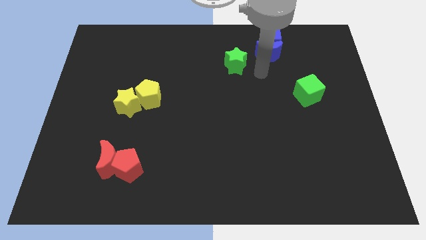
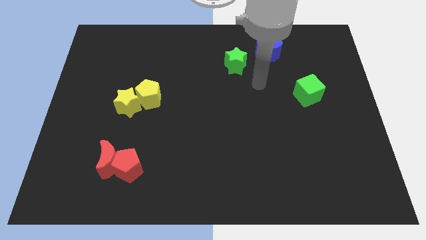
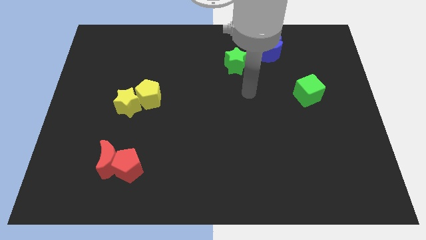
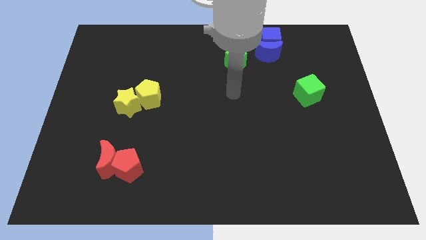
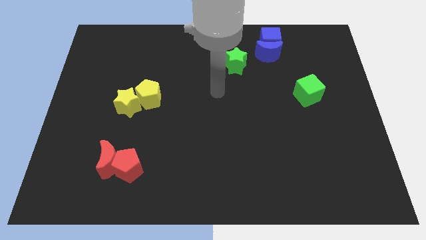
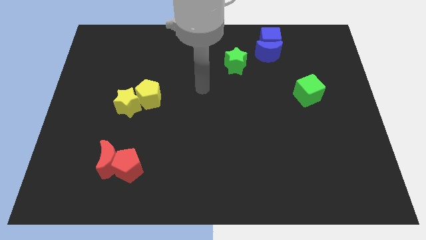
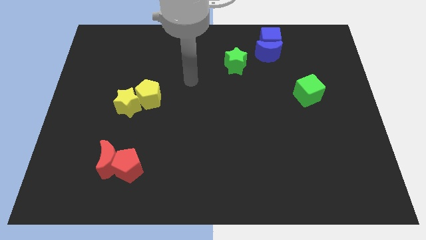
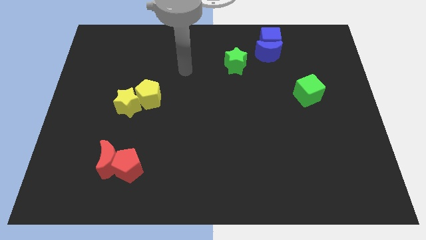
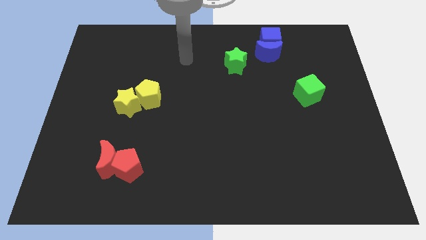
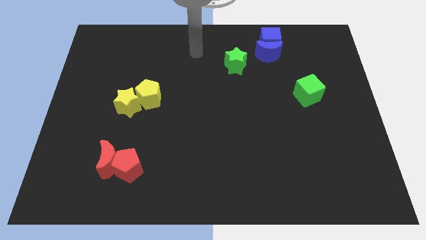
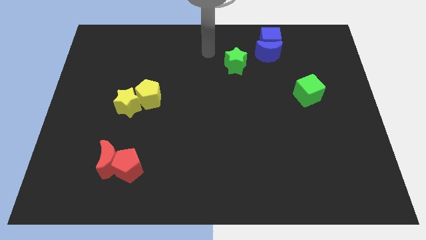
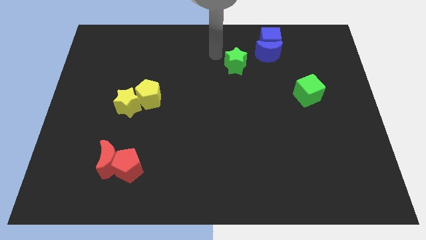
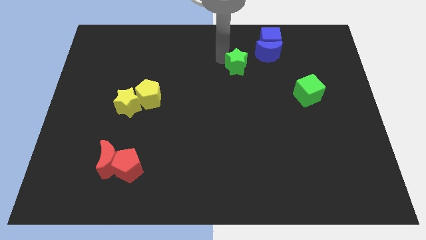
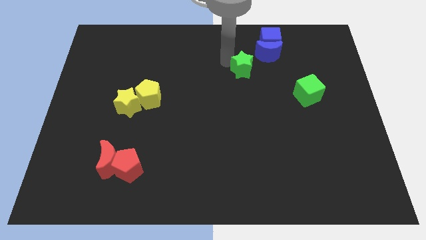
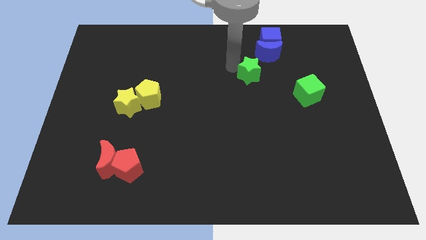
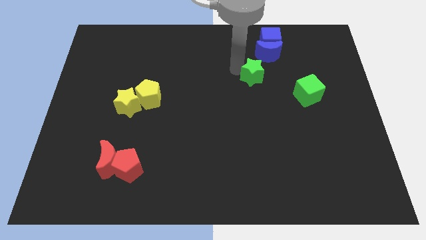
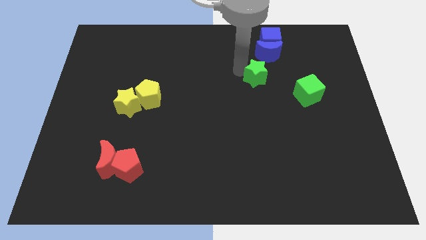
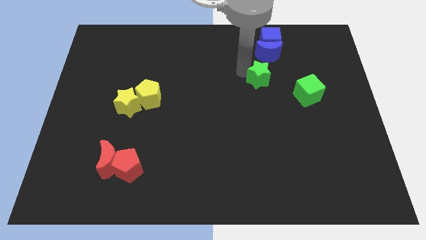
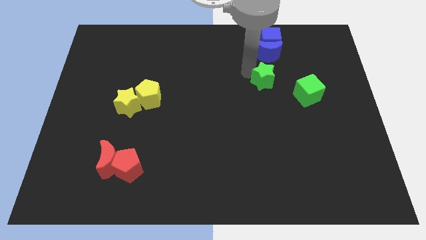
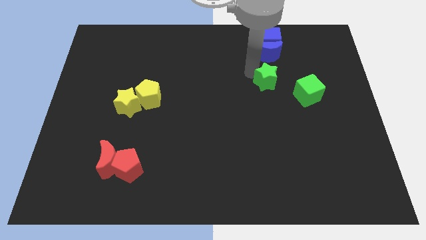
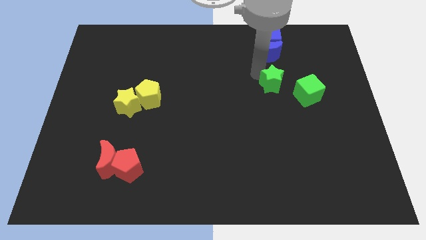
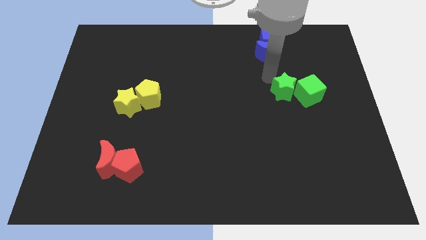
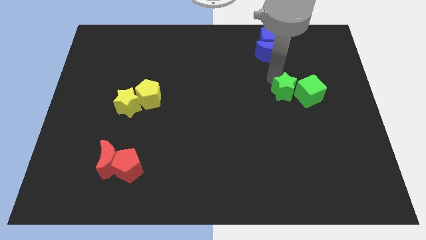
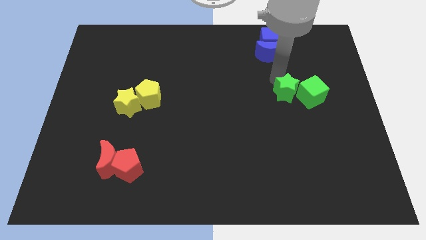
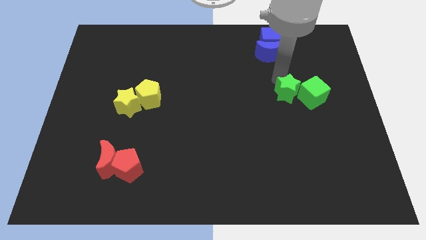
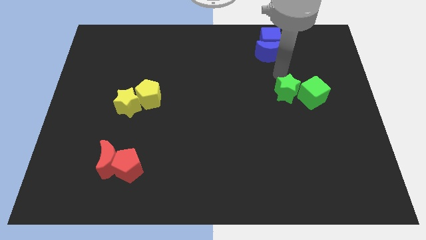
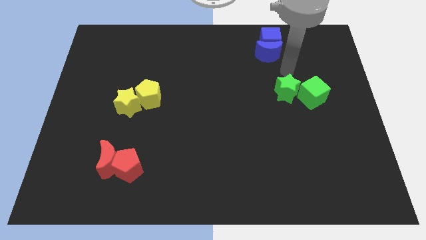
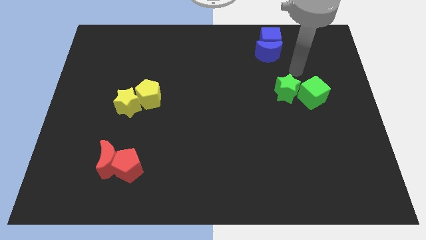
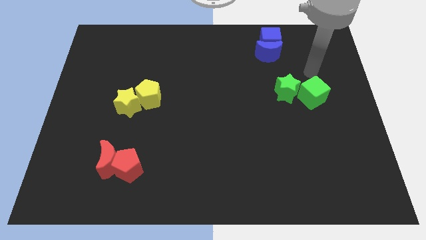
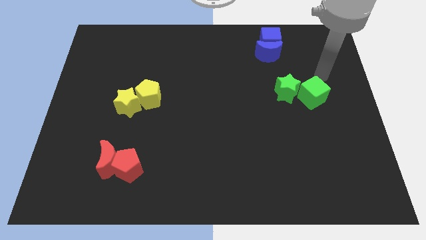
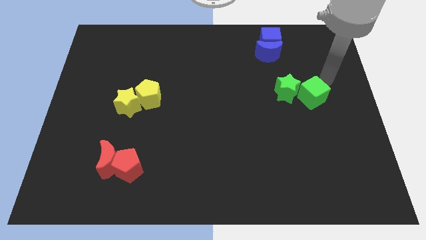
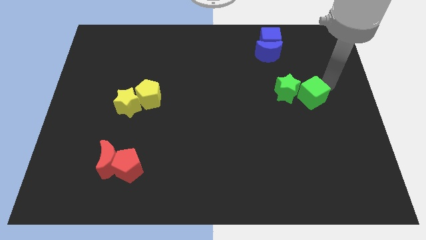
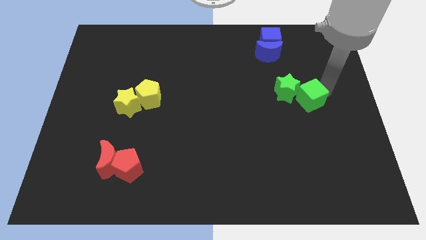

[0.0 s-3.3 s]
move the green star to the left of the green cube

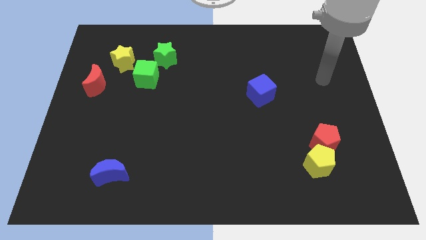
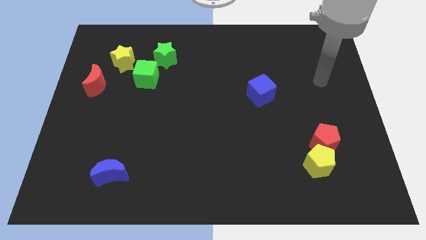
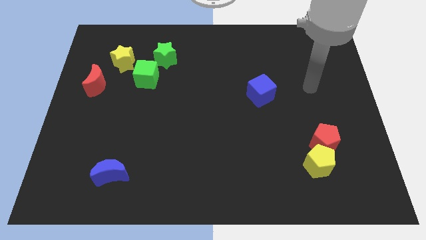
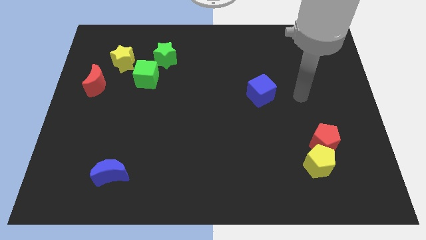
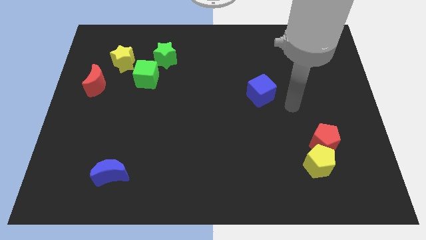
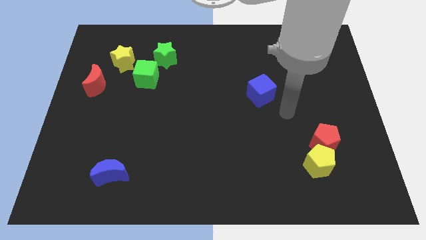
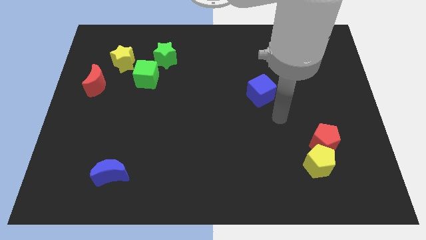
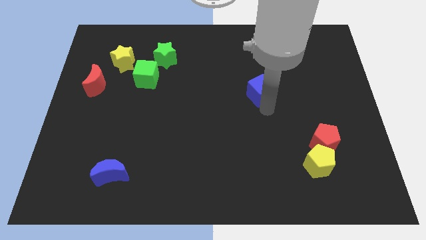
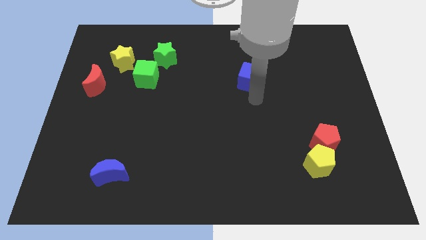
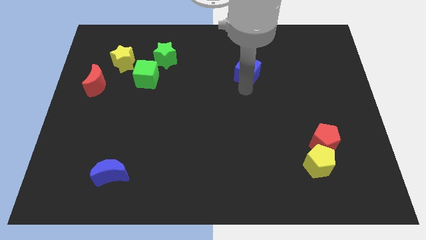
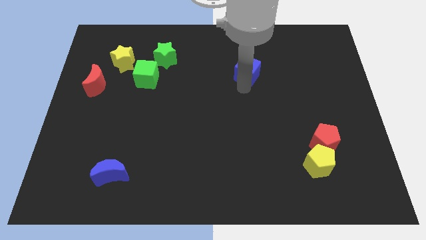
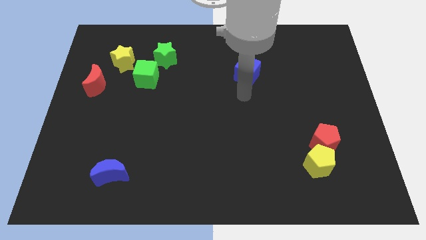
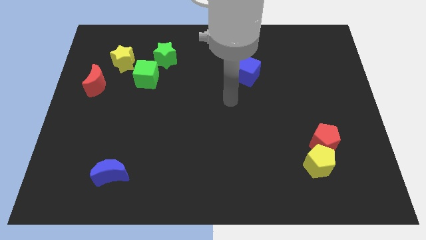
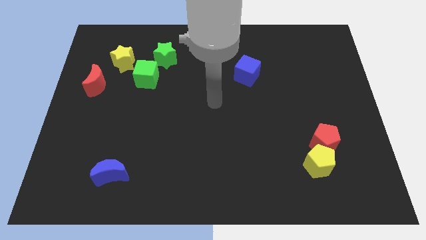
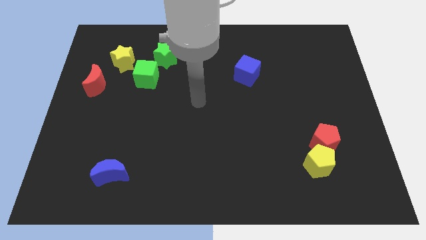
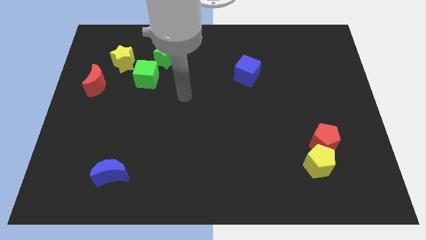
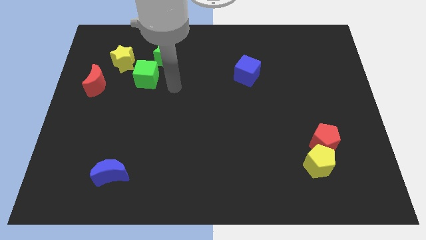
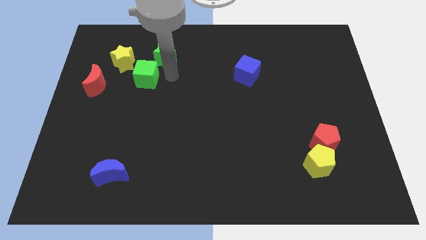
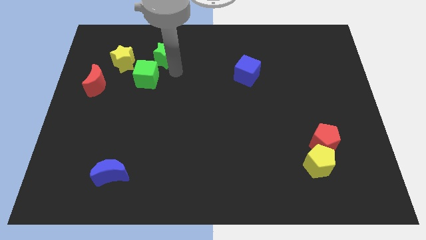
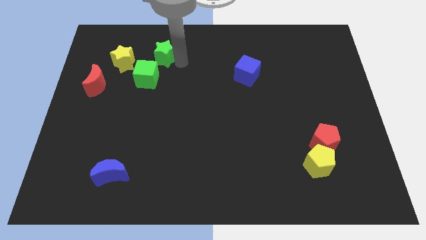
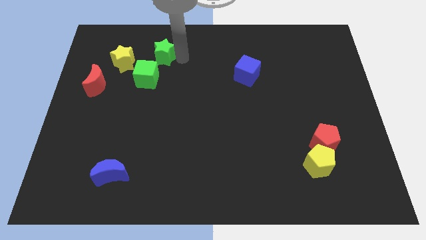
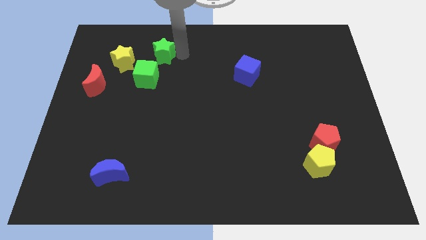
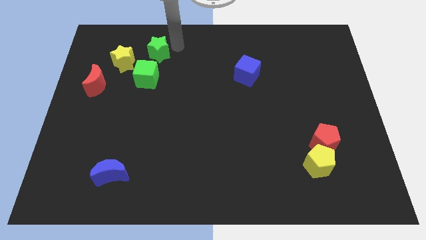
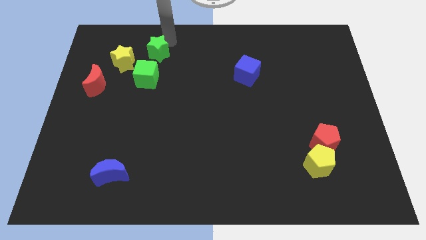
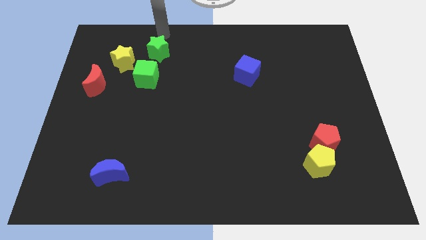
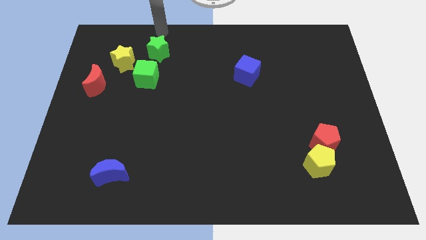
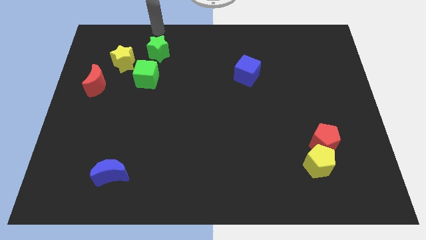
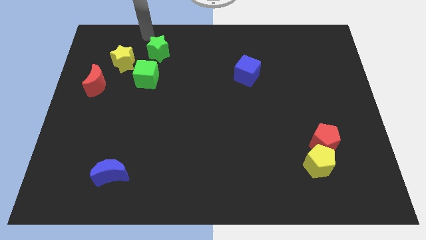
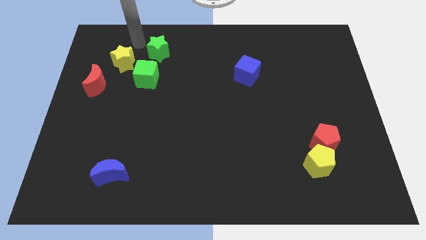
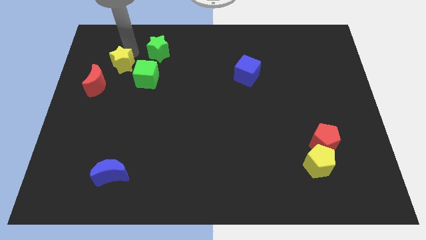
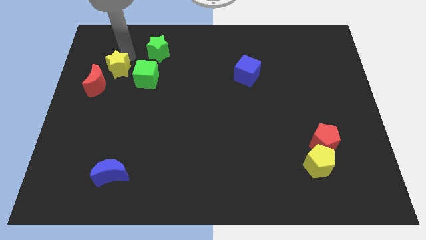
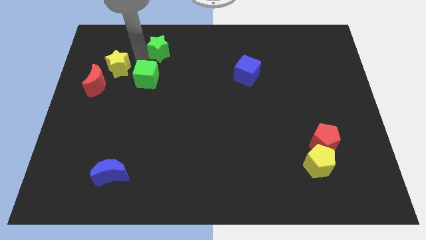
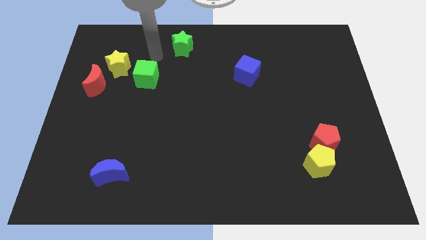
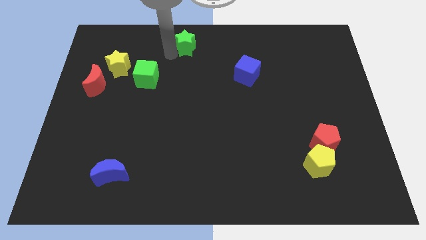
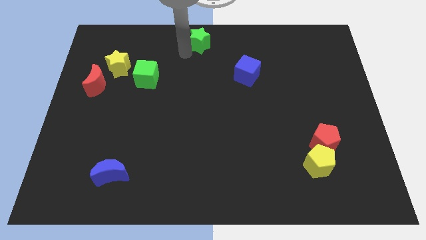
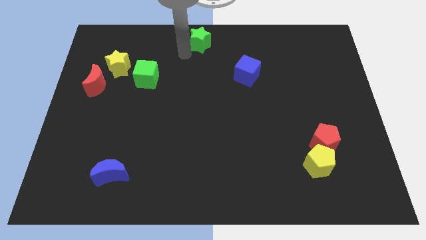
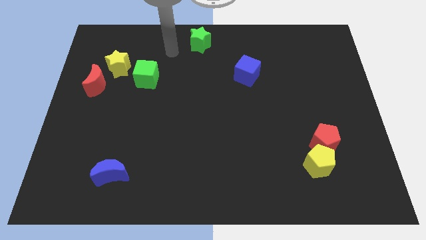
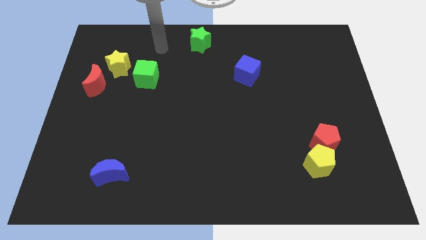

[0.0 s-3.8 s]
move the green star to the top center of the board

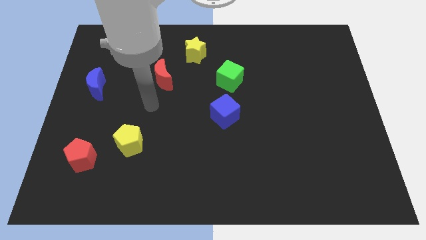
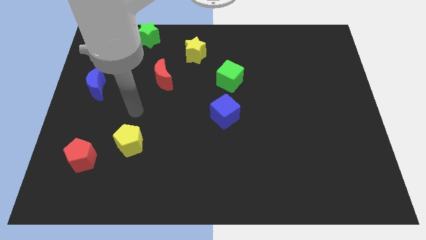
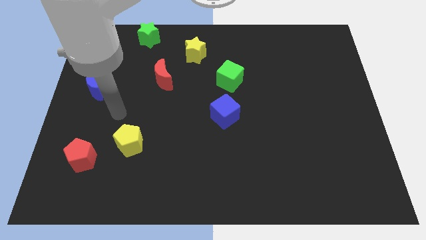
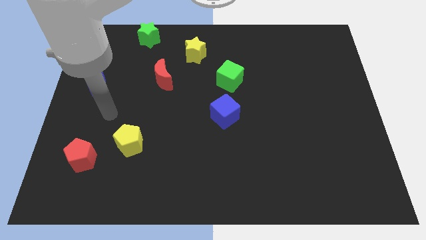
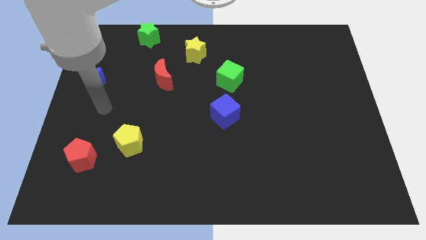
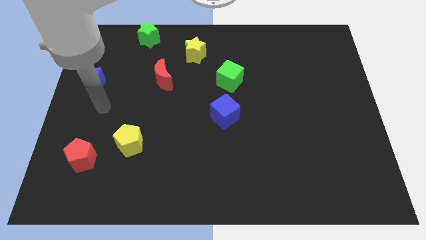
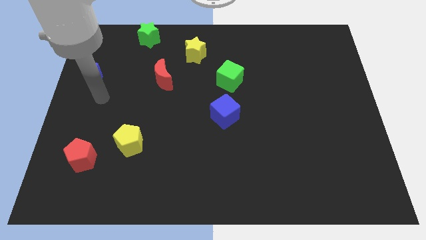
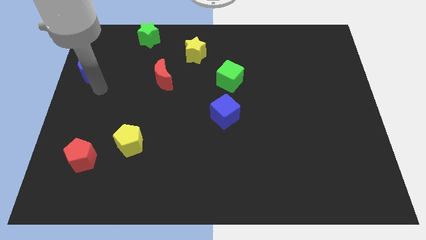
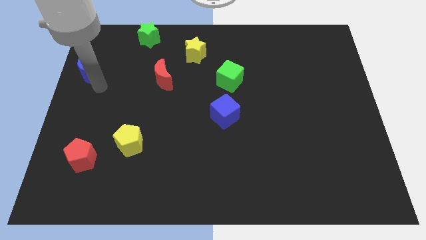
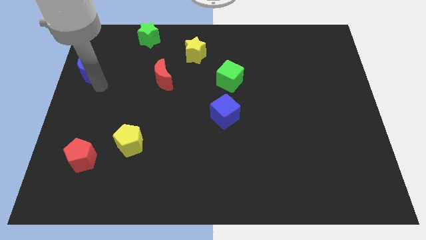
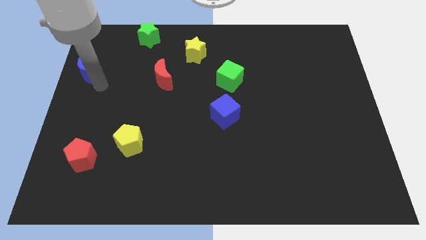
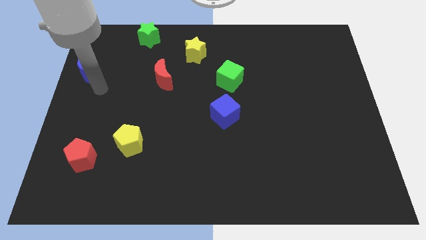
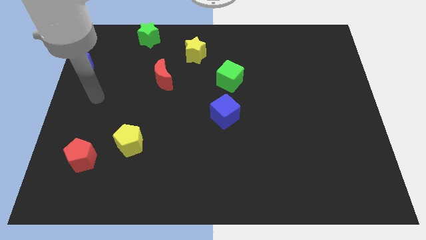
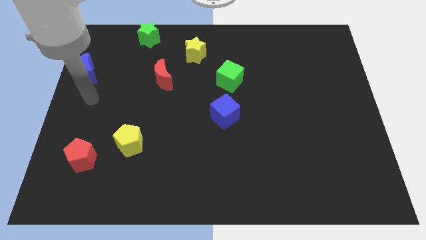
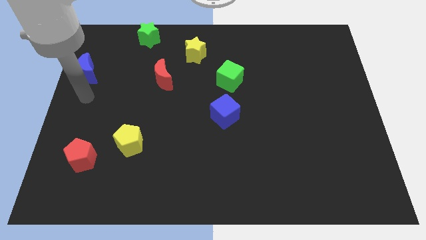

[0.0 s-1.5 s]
slide the blue crescent towards the top left

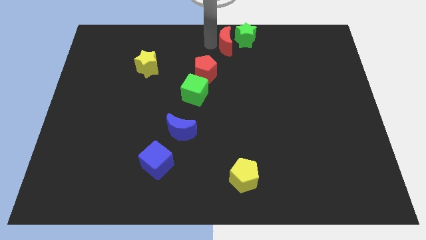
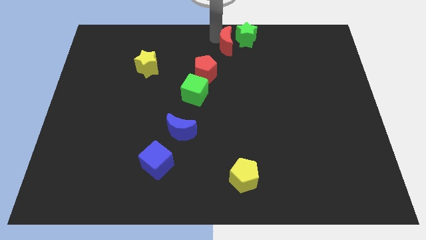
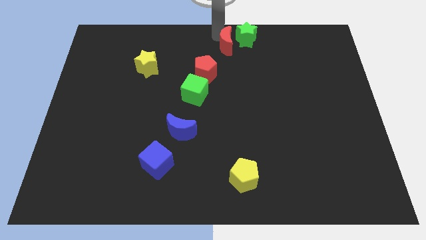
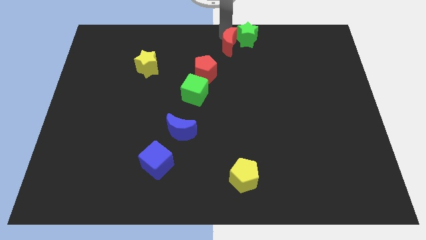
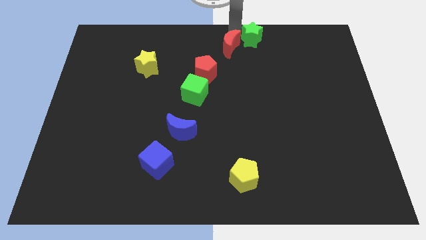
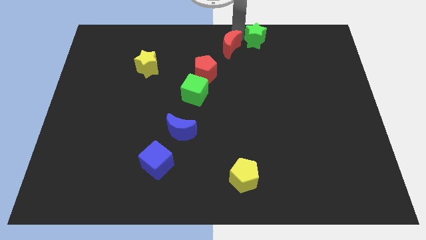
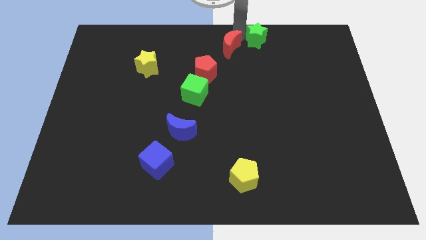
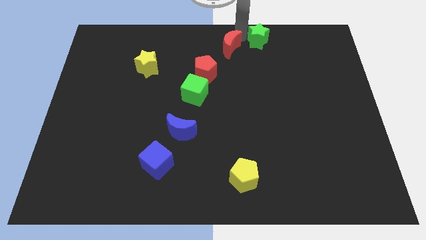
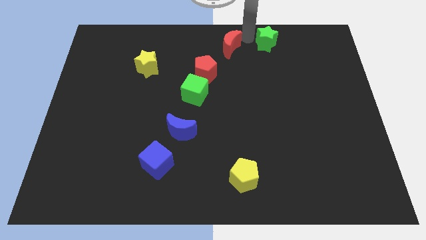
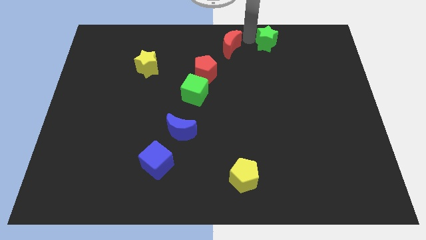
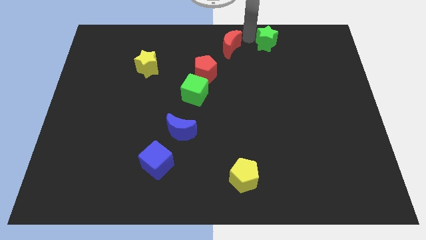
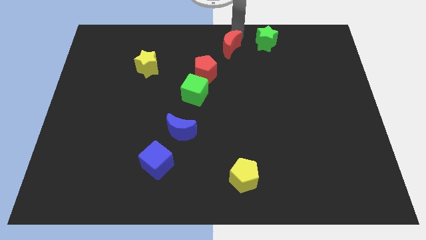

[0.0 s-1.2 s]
move the green star away from the red moon
